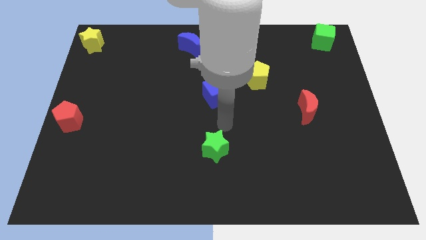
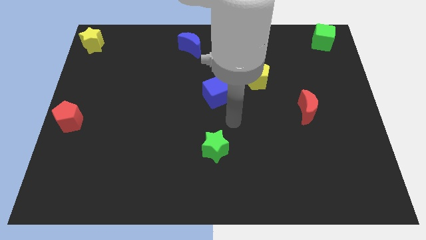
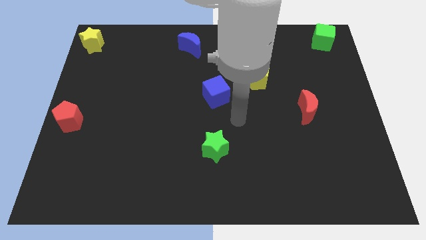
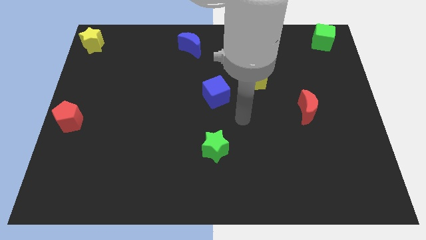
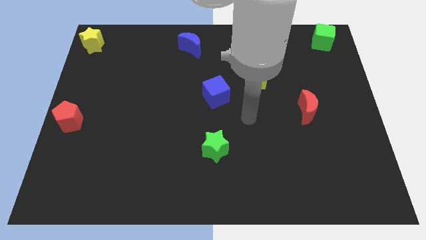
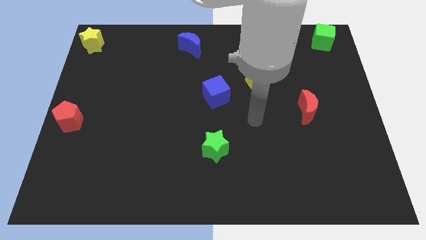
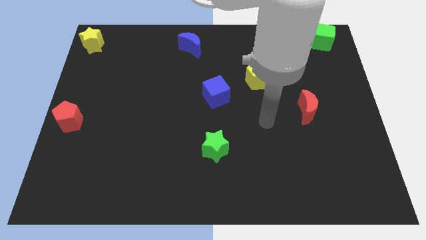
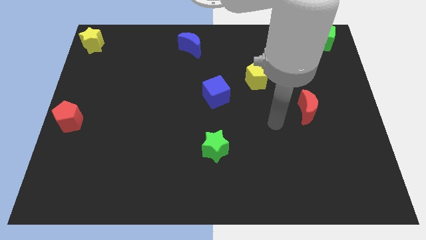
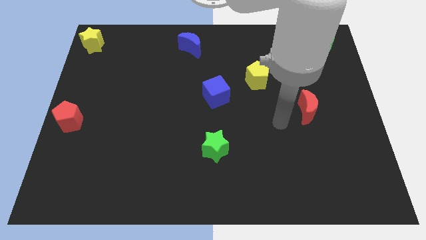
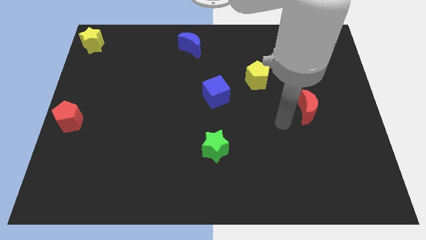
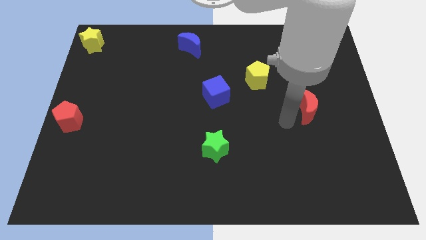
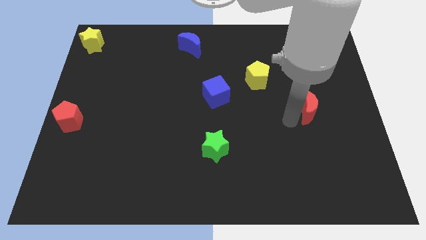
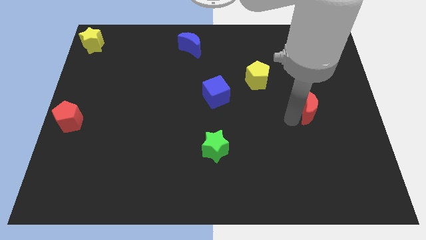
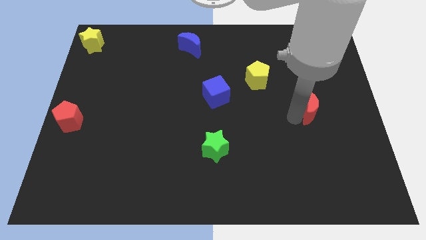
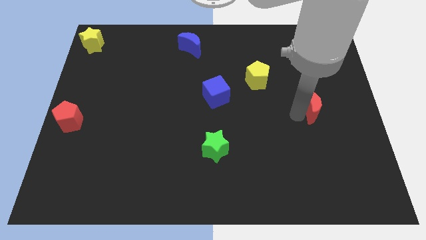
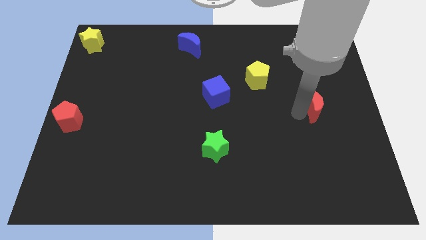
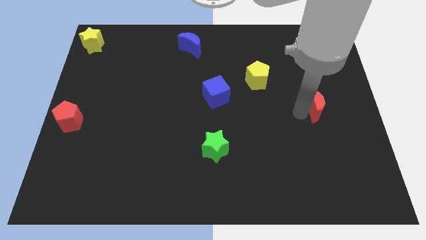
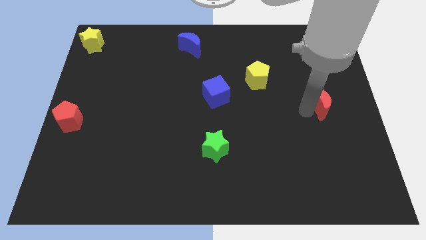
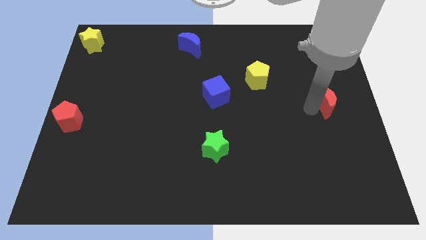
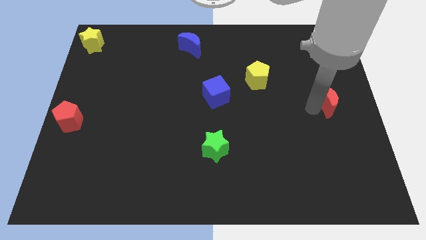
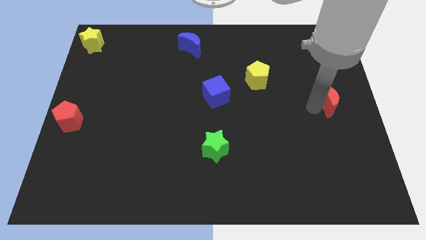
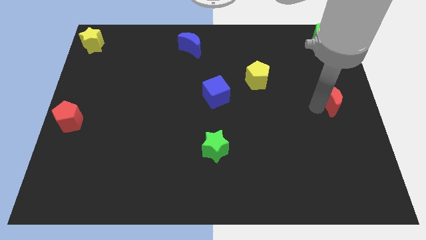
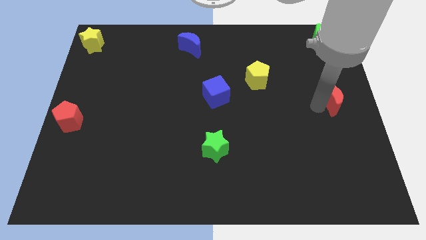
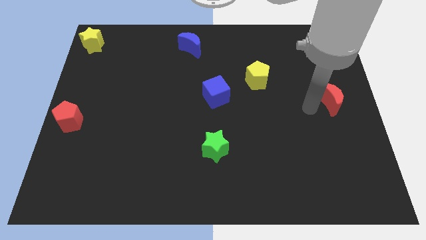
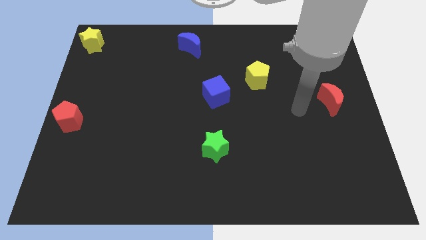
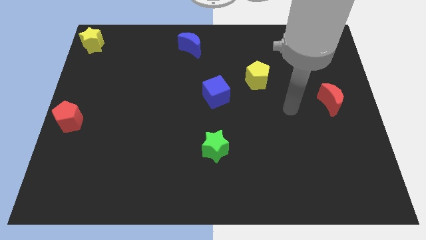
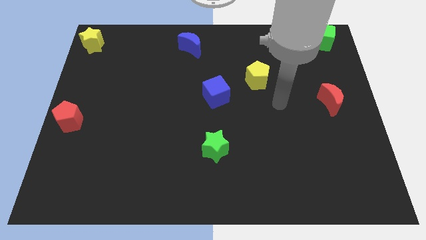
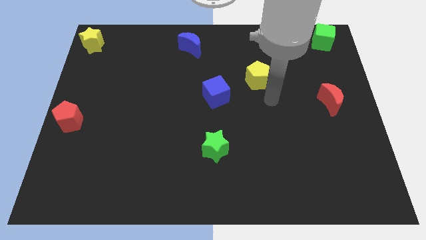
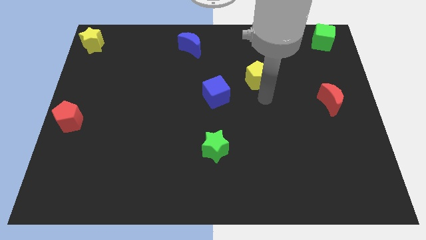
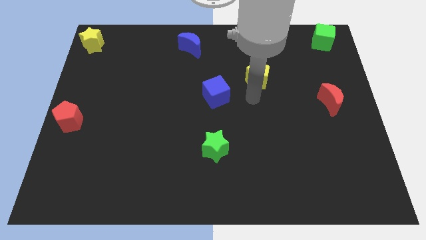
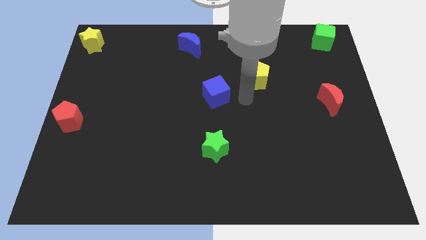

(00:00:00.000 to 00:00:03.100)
move the red crescent to the right center of the board

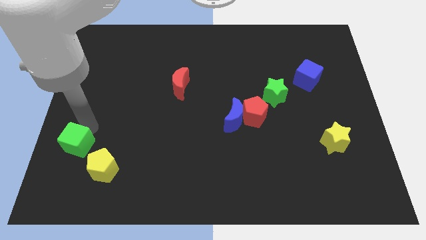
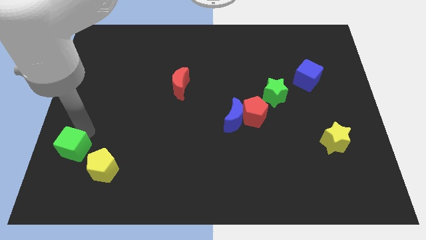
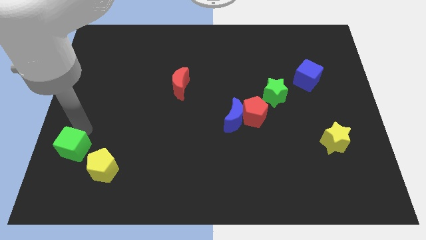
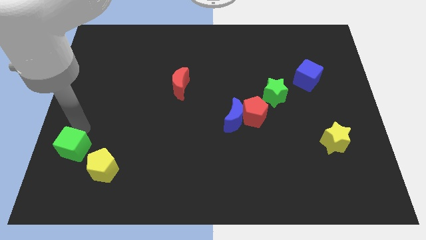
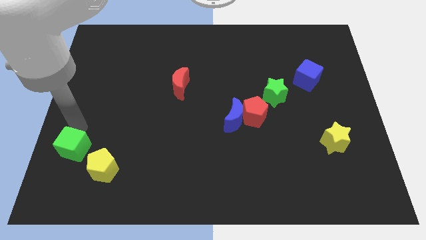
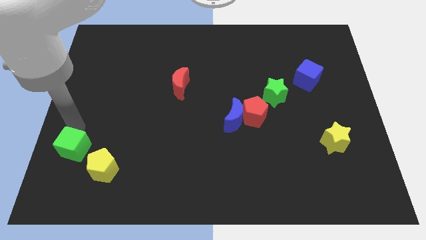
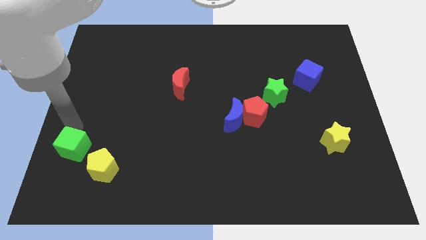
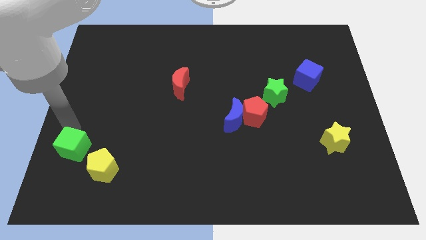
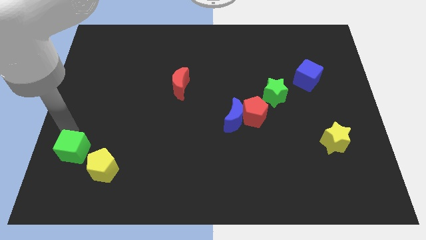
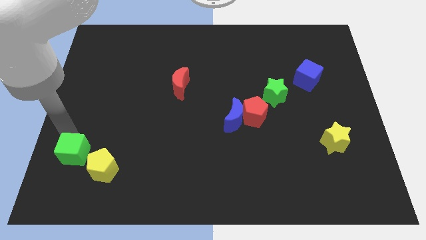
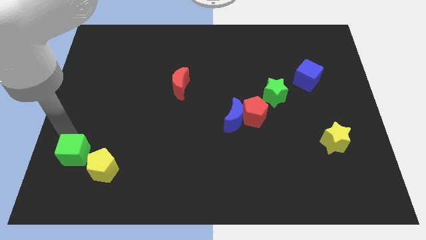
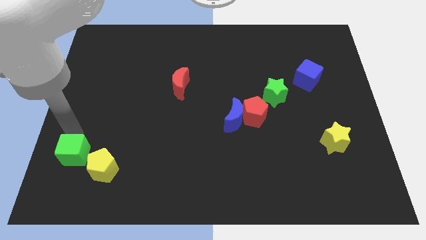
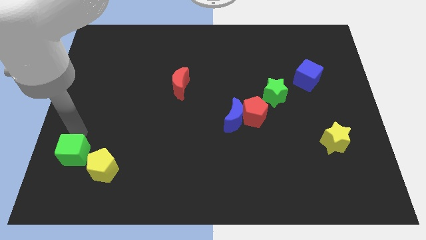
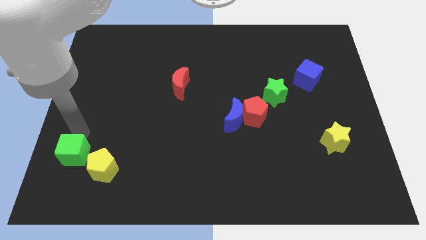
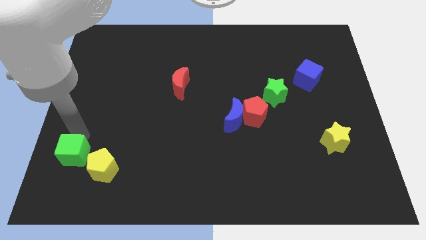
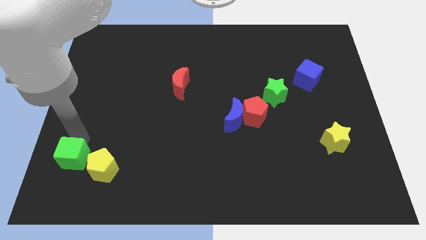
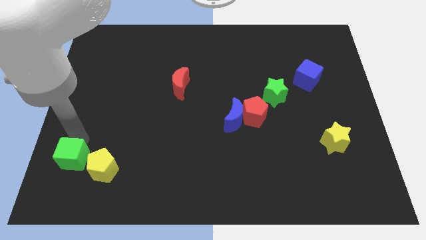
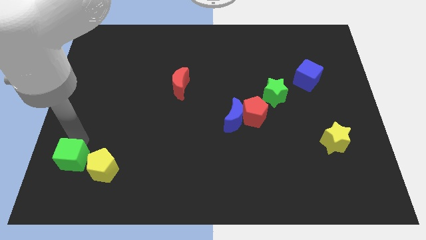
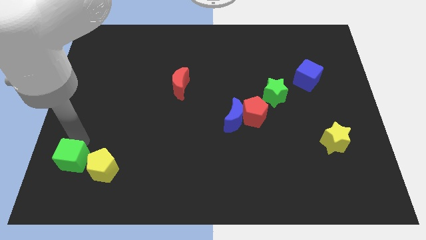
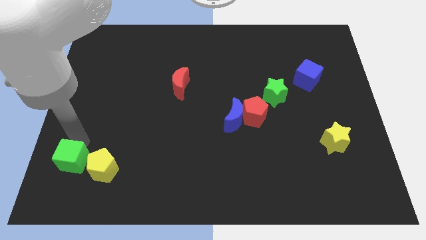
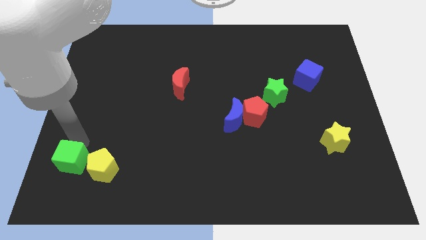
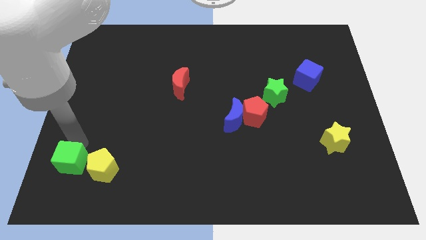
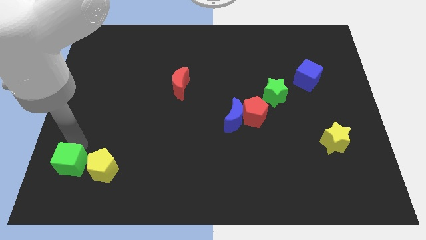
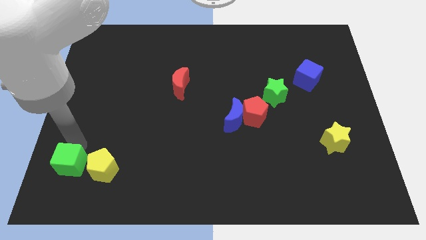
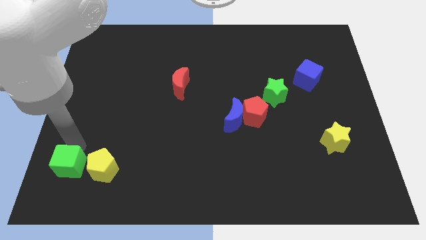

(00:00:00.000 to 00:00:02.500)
place green cube beside yellow pentagon

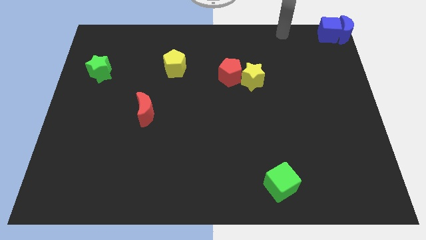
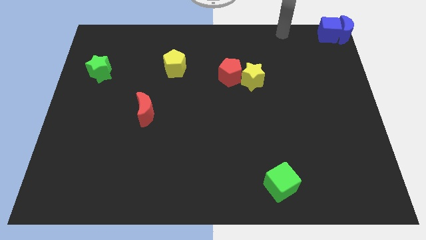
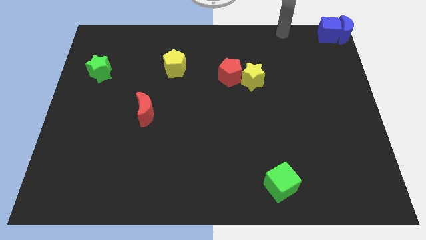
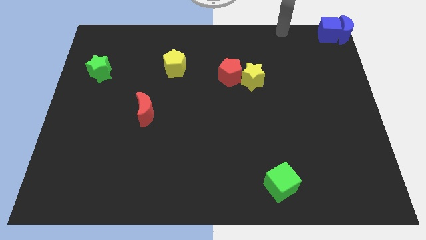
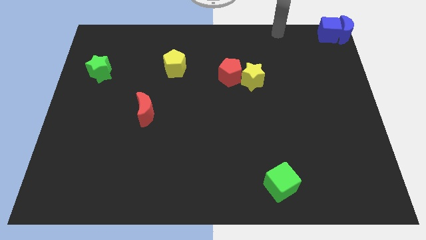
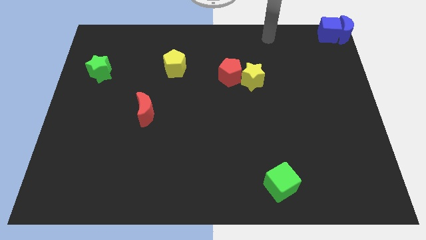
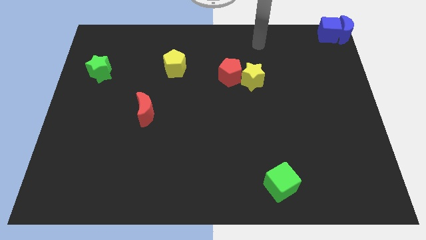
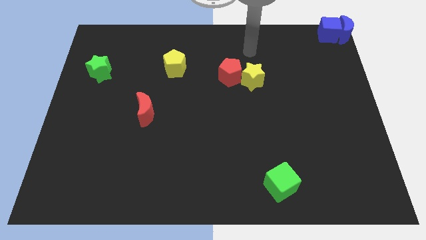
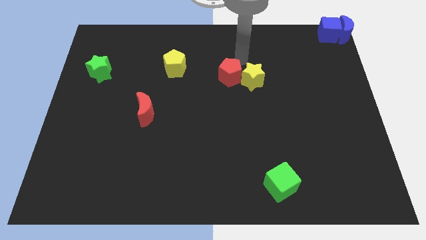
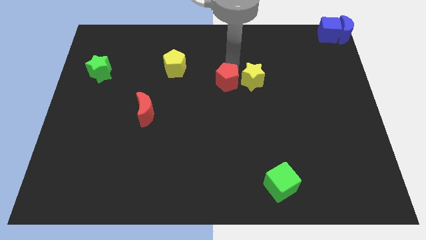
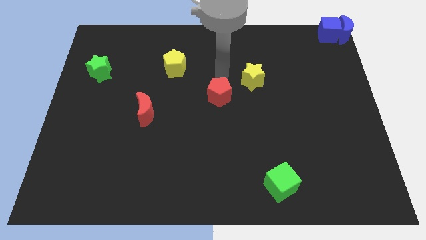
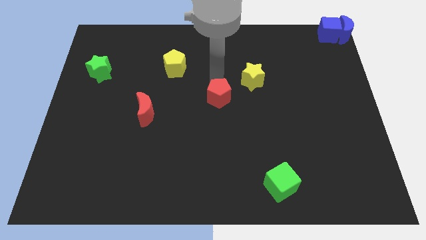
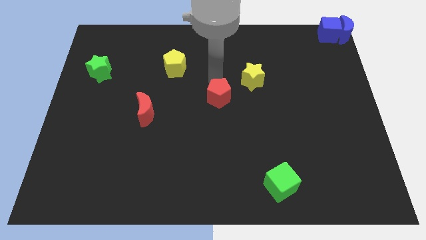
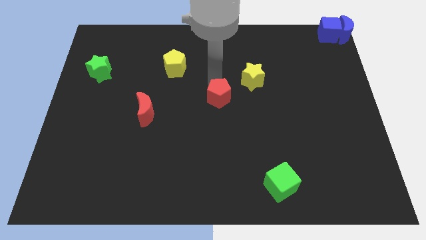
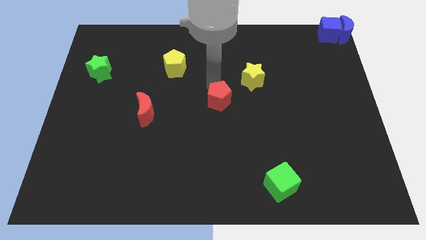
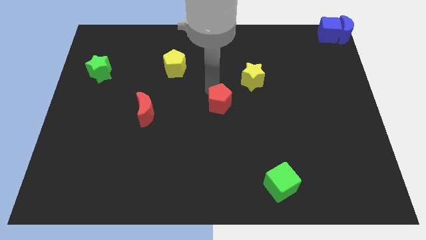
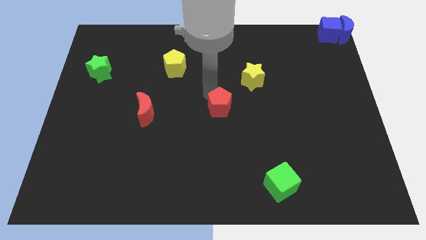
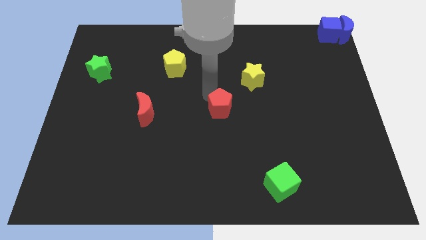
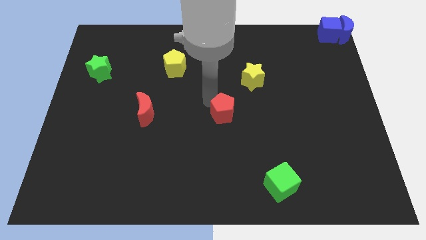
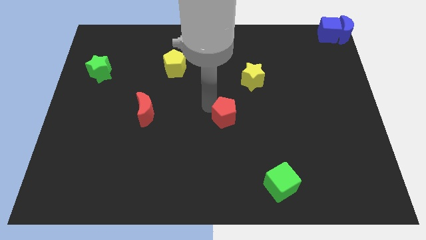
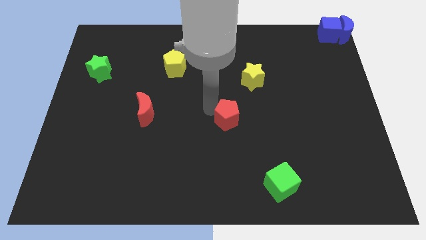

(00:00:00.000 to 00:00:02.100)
separate red pentagon from yellow star

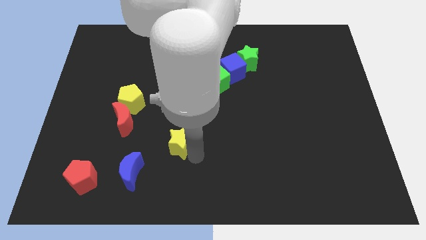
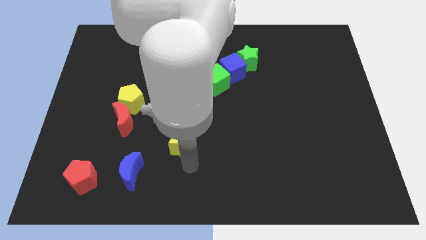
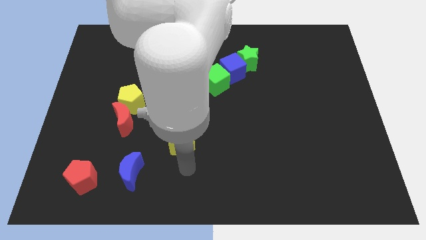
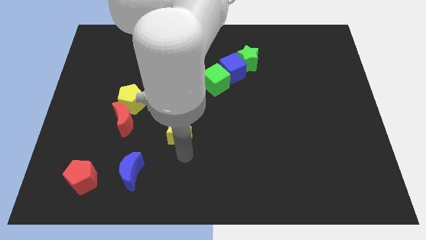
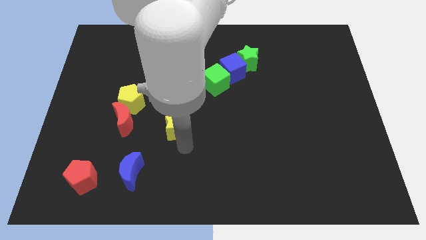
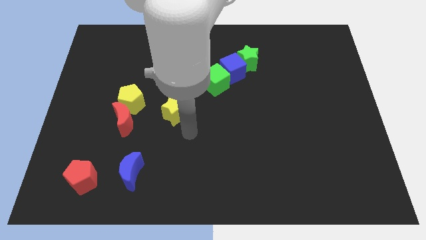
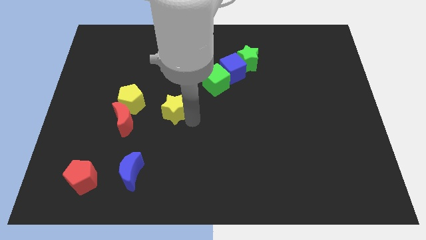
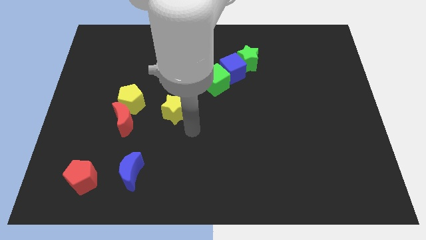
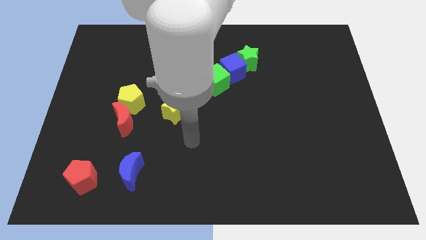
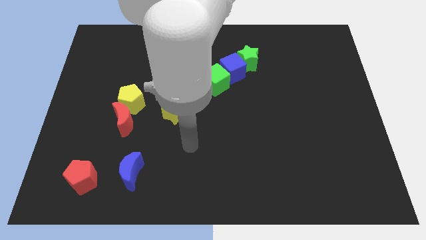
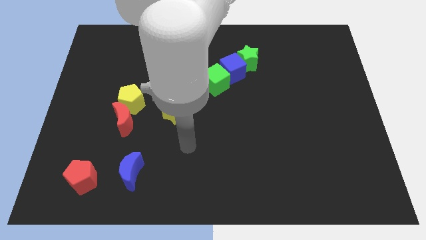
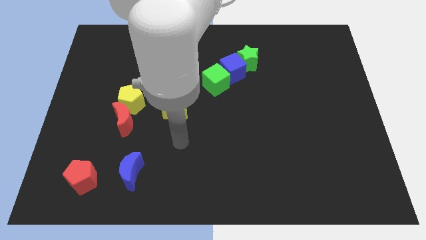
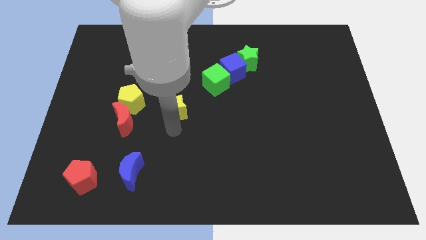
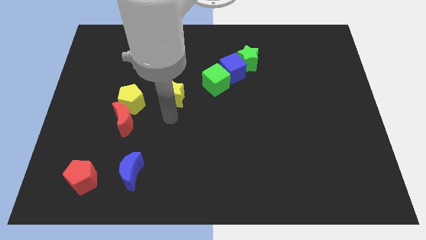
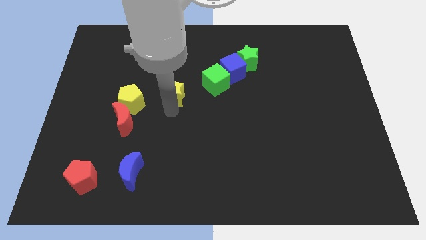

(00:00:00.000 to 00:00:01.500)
move the yellow star to the right of yellow pentagon
